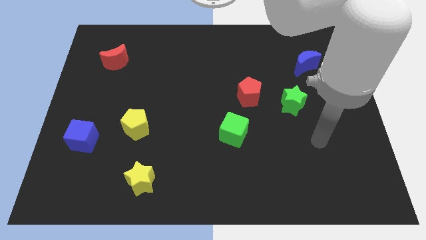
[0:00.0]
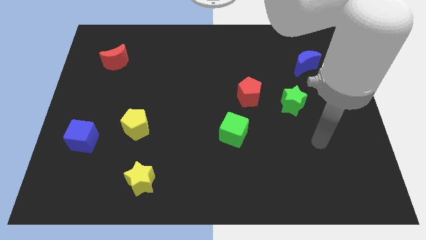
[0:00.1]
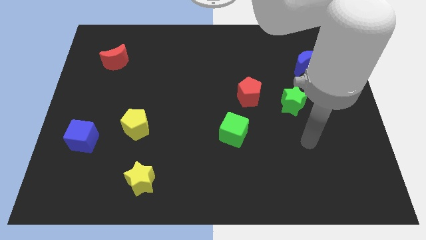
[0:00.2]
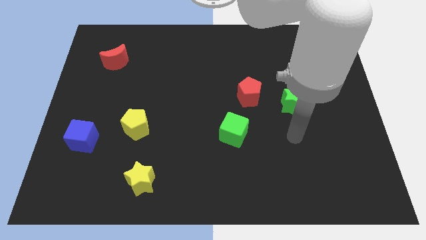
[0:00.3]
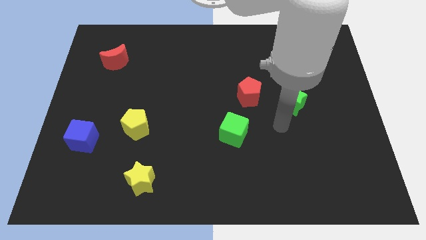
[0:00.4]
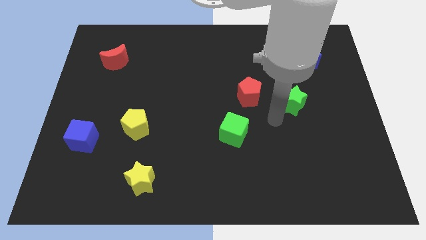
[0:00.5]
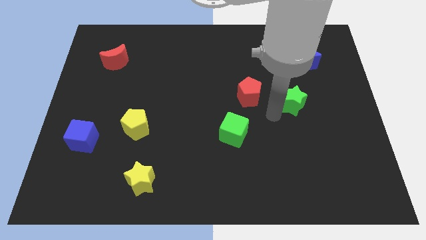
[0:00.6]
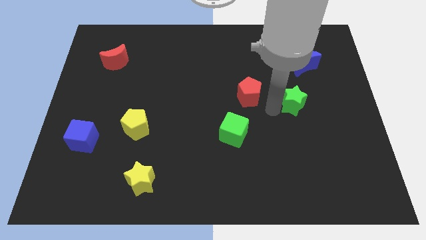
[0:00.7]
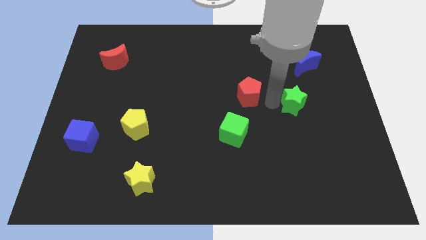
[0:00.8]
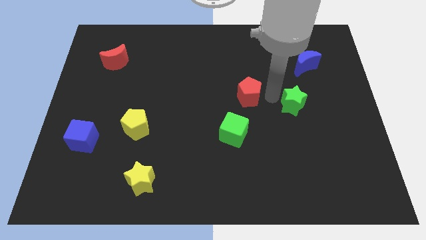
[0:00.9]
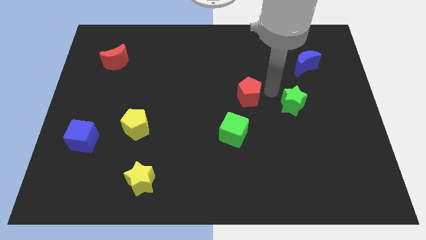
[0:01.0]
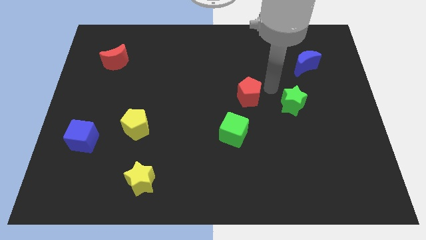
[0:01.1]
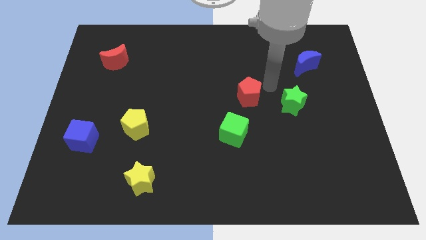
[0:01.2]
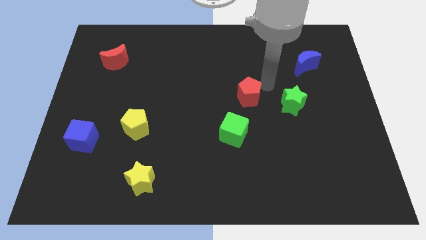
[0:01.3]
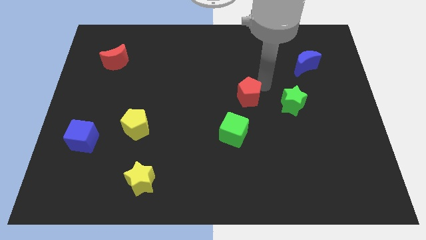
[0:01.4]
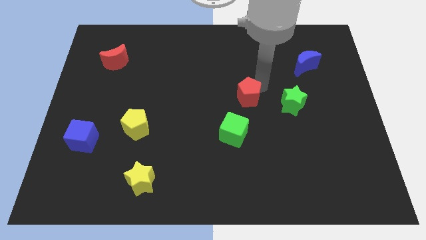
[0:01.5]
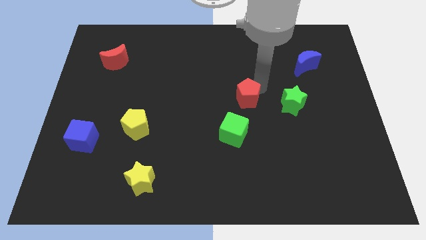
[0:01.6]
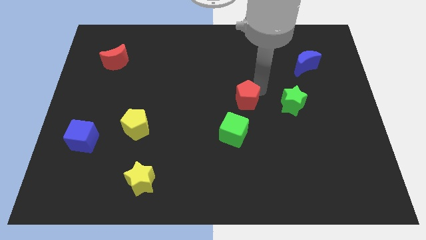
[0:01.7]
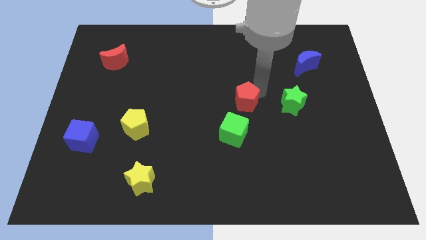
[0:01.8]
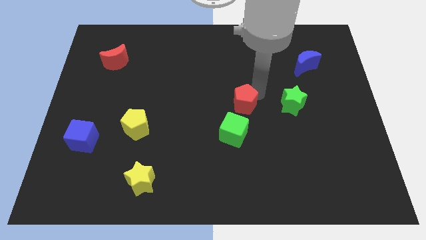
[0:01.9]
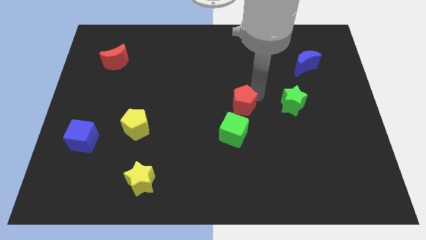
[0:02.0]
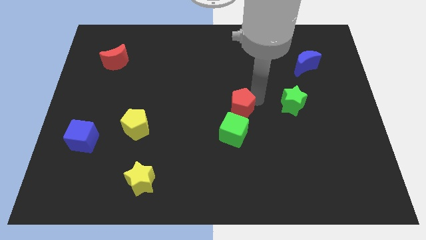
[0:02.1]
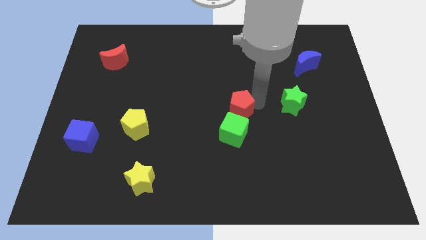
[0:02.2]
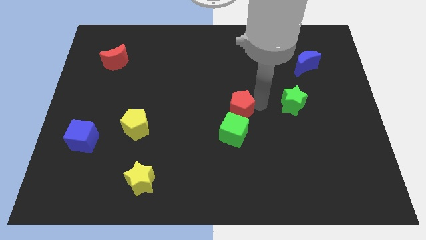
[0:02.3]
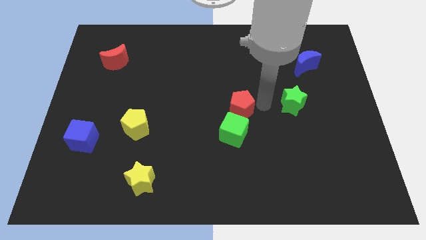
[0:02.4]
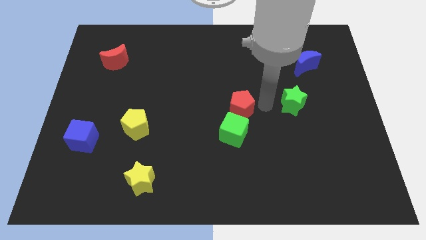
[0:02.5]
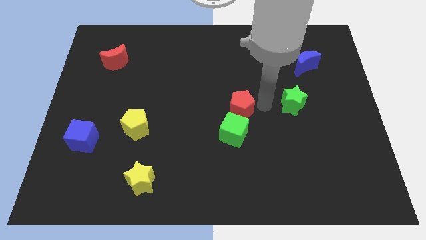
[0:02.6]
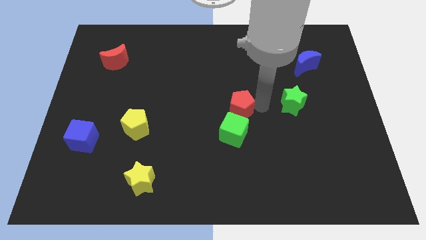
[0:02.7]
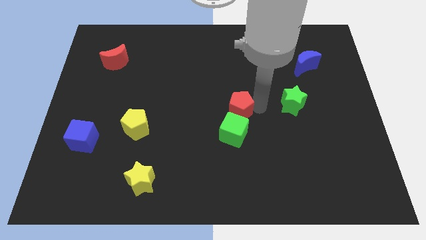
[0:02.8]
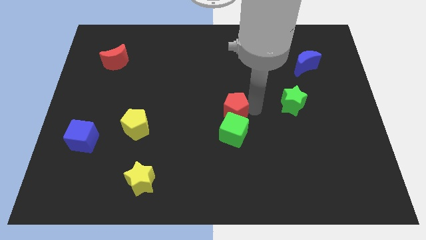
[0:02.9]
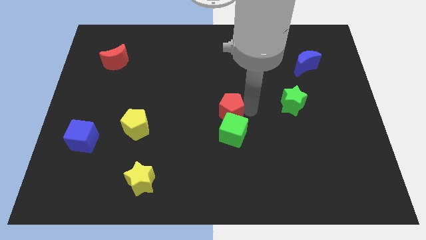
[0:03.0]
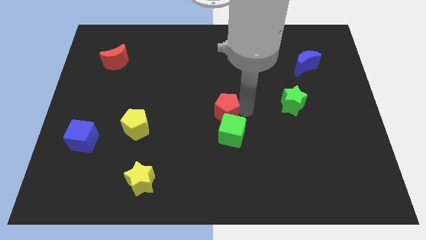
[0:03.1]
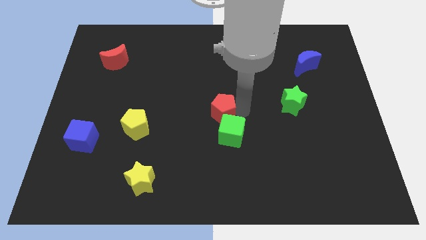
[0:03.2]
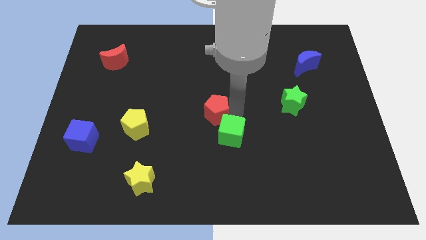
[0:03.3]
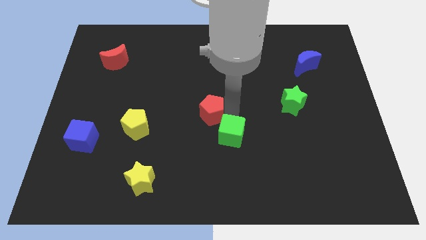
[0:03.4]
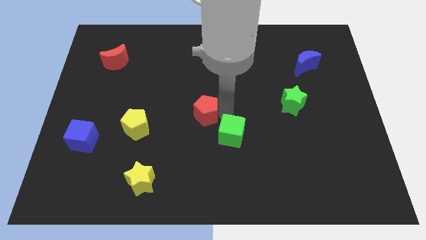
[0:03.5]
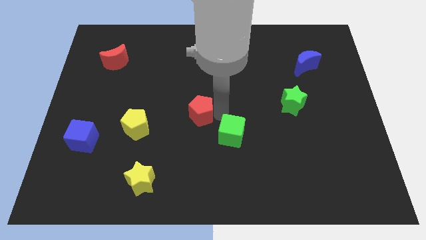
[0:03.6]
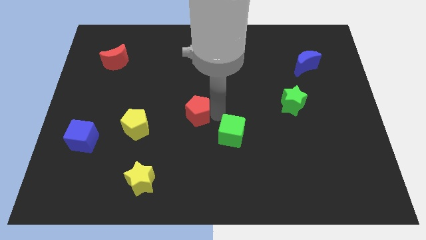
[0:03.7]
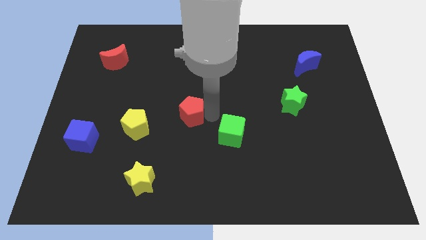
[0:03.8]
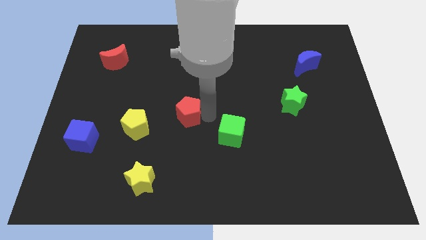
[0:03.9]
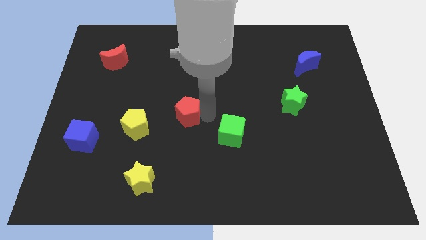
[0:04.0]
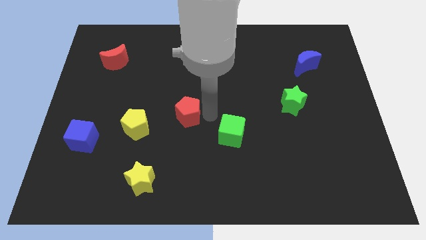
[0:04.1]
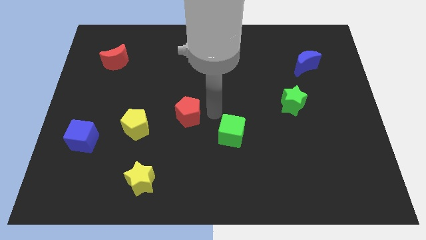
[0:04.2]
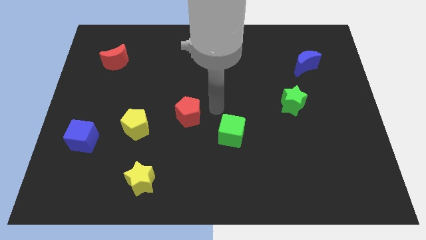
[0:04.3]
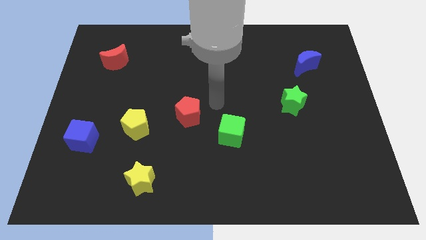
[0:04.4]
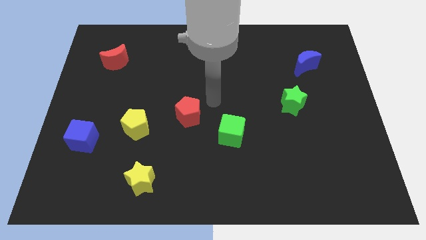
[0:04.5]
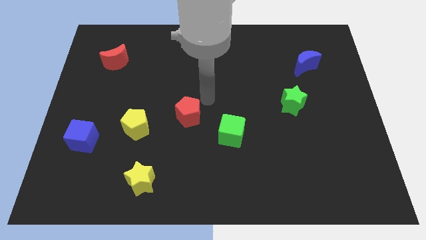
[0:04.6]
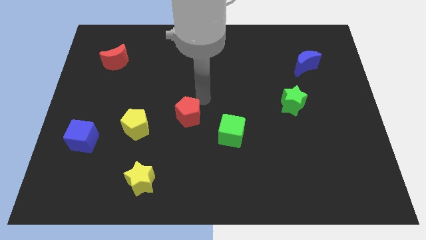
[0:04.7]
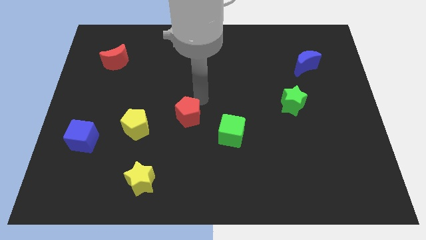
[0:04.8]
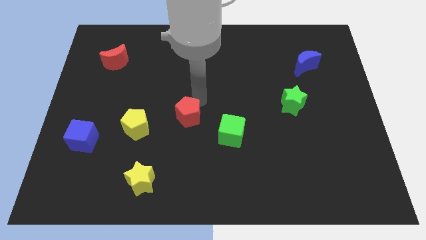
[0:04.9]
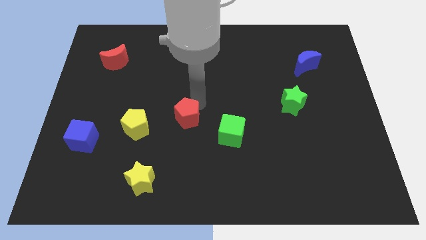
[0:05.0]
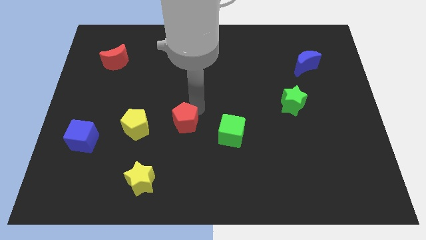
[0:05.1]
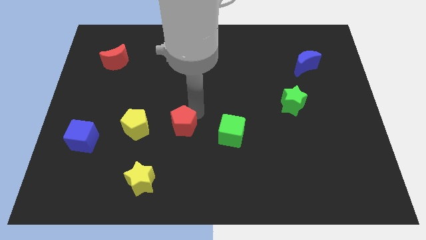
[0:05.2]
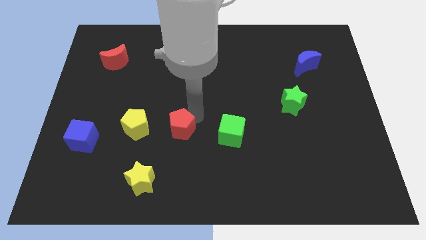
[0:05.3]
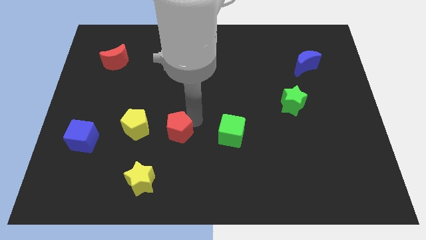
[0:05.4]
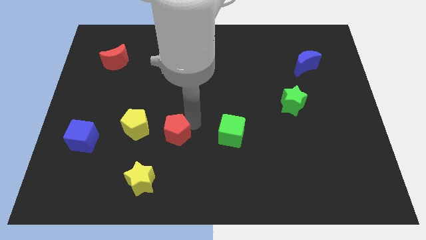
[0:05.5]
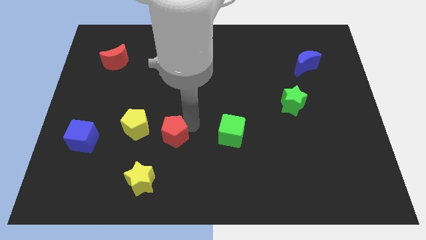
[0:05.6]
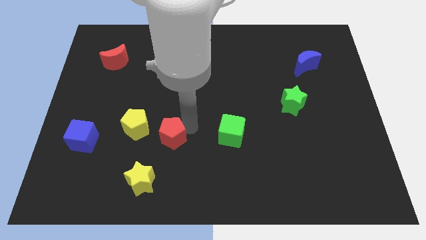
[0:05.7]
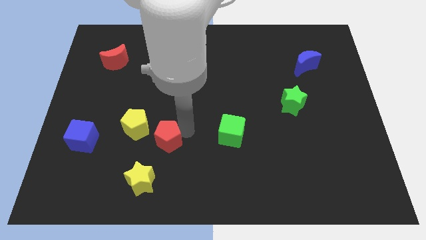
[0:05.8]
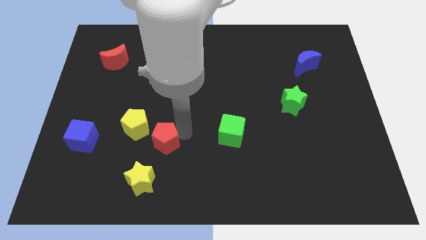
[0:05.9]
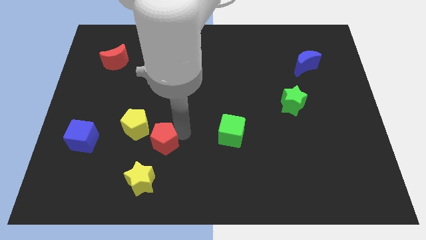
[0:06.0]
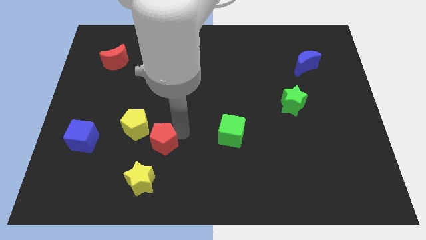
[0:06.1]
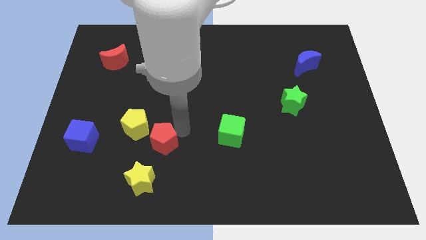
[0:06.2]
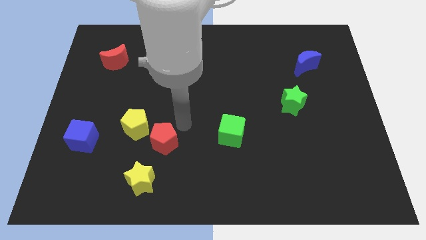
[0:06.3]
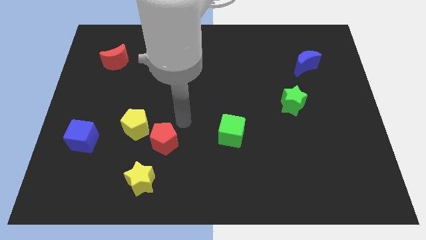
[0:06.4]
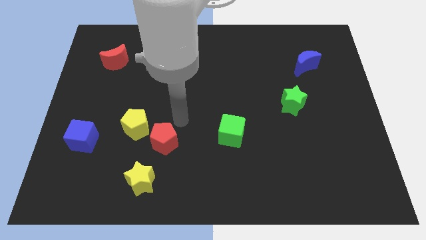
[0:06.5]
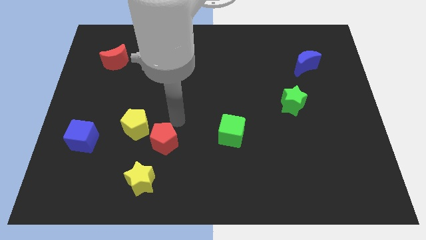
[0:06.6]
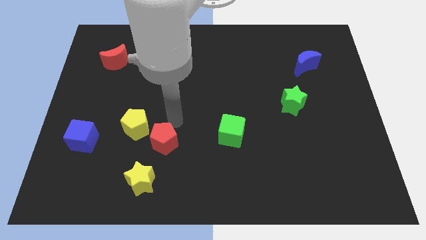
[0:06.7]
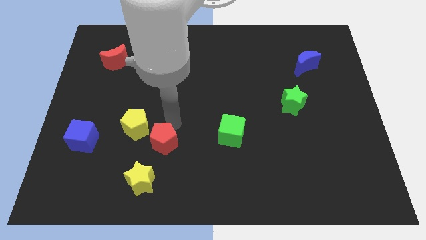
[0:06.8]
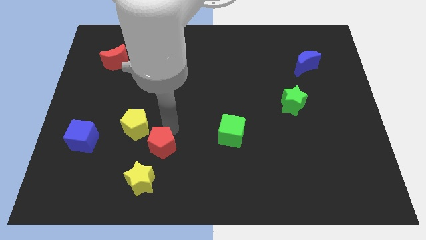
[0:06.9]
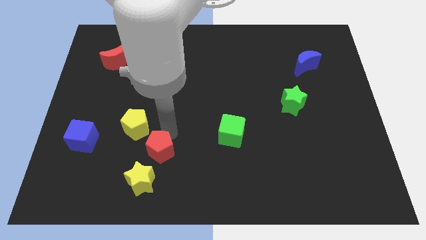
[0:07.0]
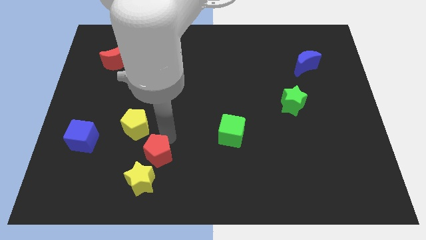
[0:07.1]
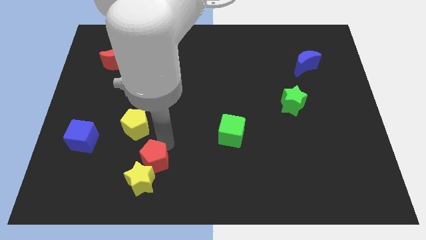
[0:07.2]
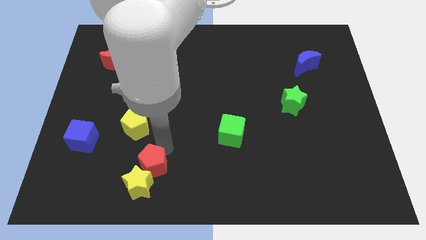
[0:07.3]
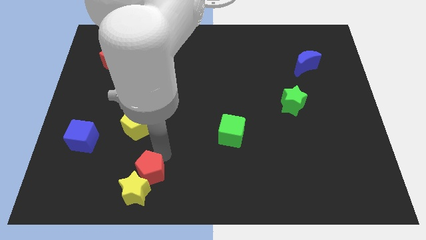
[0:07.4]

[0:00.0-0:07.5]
slide the red pentagon to the yellow star

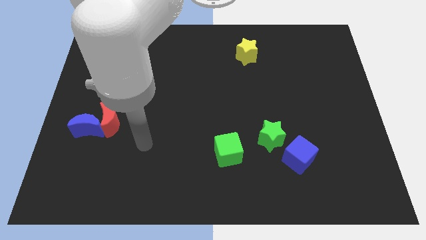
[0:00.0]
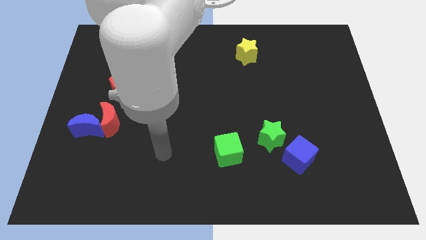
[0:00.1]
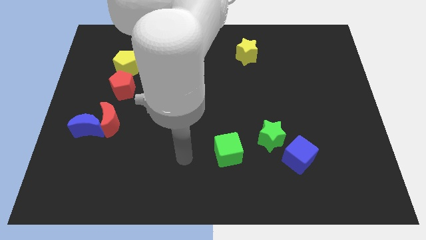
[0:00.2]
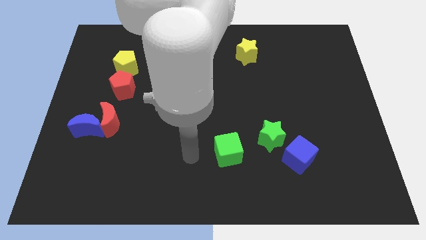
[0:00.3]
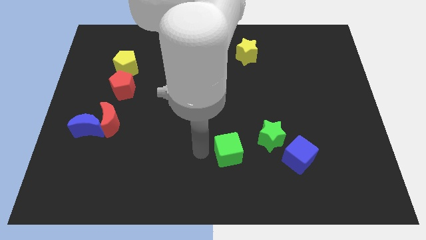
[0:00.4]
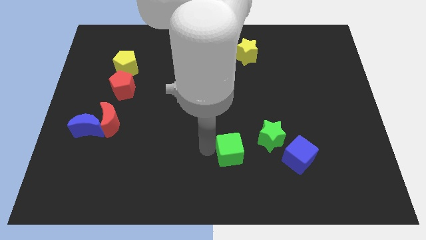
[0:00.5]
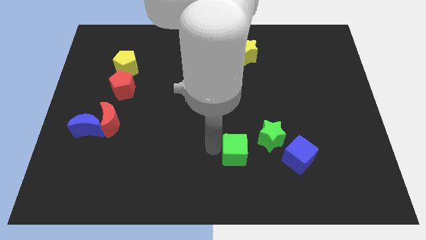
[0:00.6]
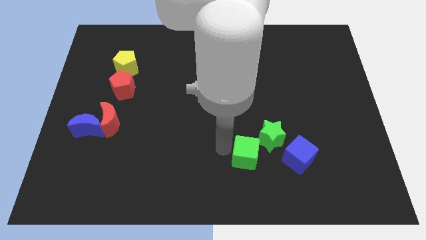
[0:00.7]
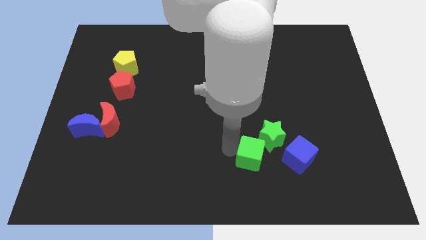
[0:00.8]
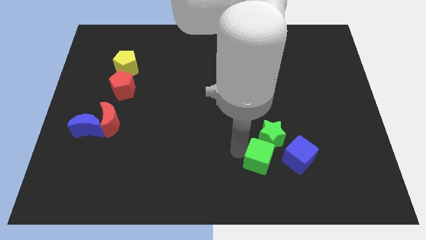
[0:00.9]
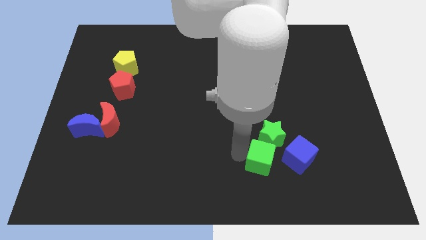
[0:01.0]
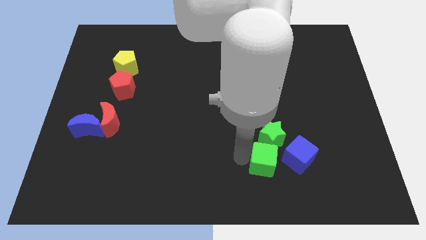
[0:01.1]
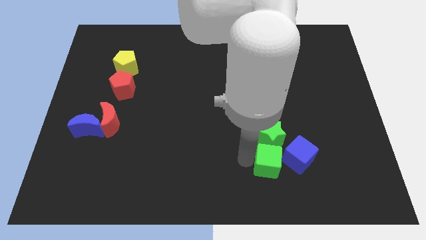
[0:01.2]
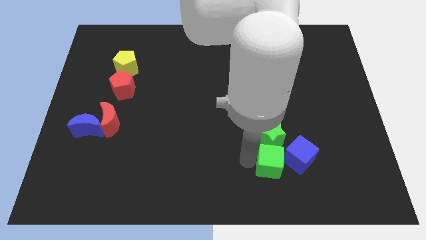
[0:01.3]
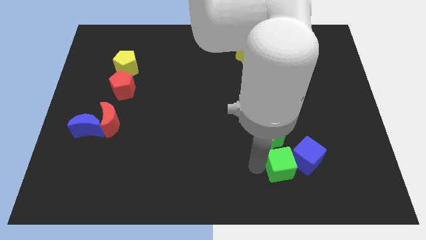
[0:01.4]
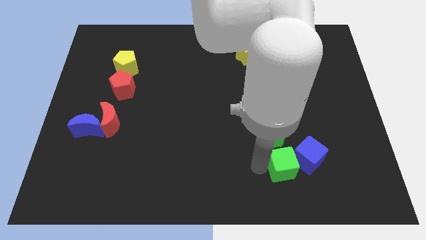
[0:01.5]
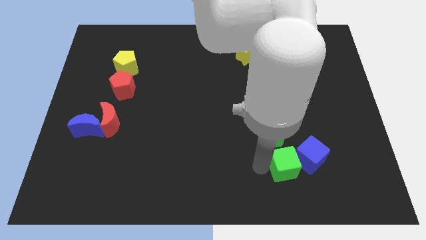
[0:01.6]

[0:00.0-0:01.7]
slide the green cube close to the blue cube
